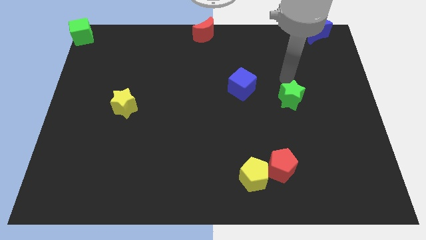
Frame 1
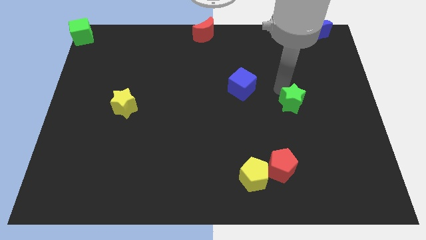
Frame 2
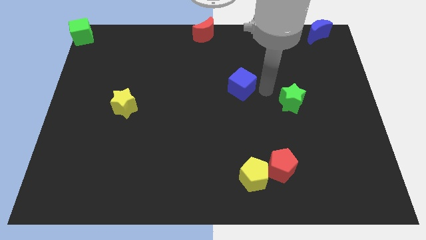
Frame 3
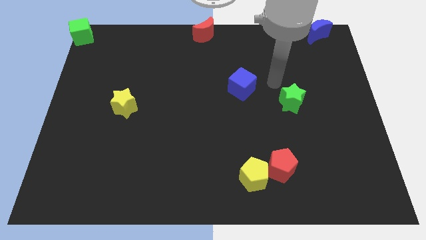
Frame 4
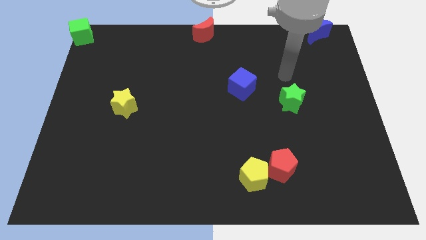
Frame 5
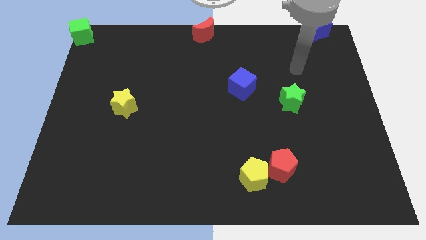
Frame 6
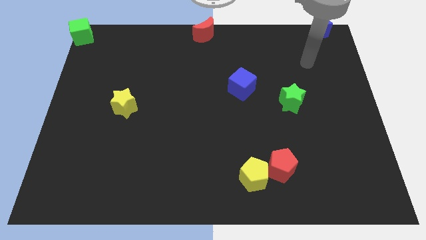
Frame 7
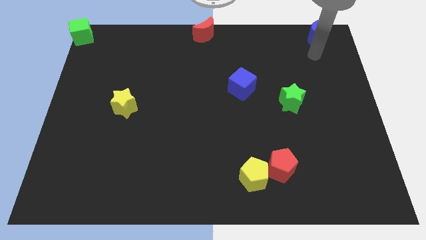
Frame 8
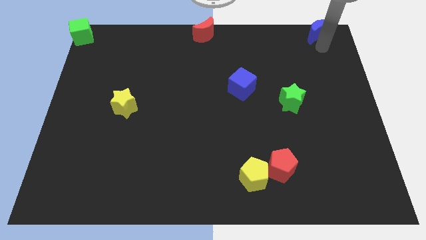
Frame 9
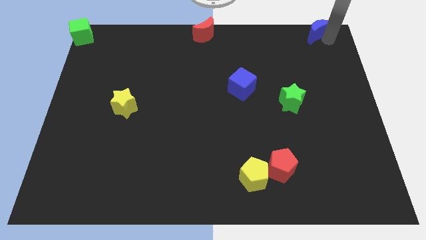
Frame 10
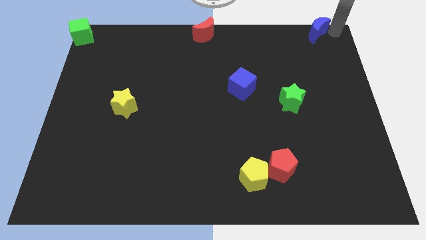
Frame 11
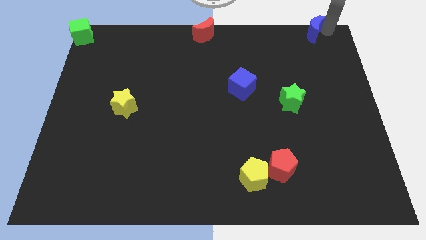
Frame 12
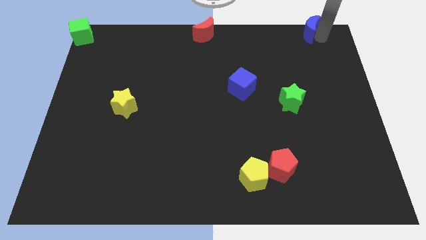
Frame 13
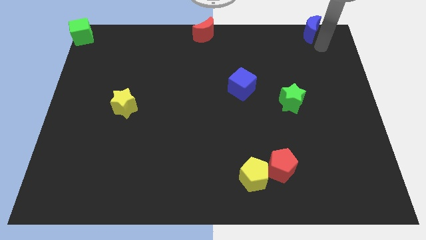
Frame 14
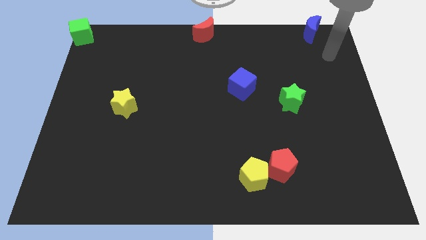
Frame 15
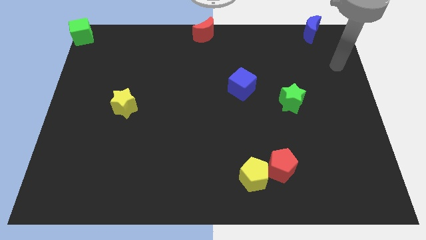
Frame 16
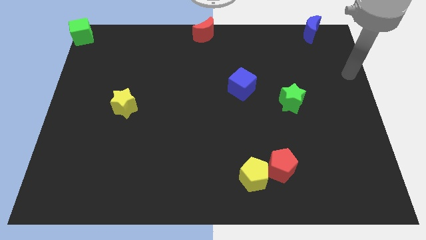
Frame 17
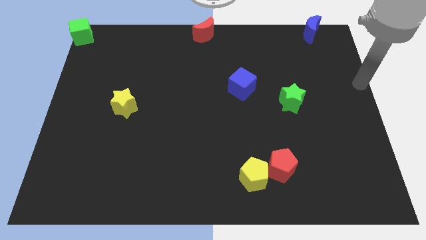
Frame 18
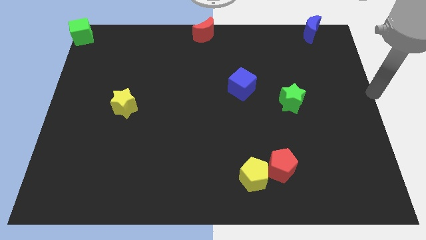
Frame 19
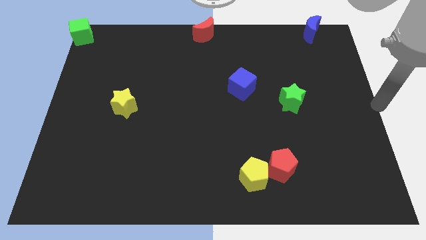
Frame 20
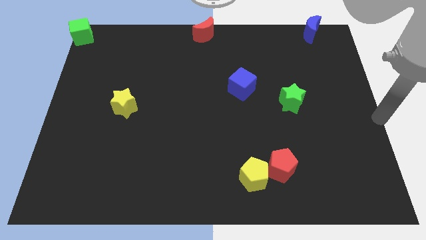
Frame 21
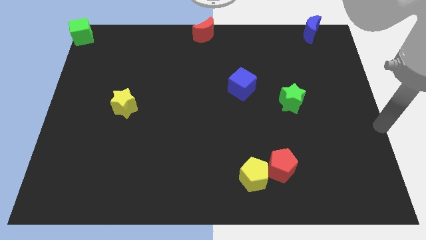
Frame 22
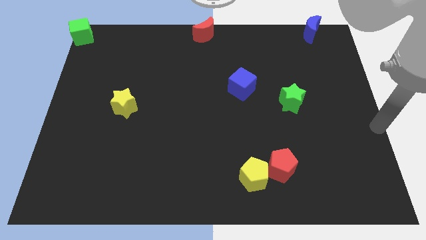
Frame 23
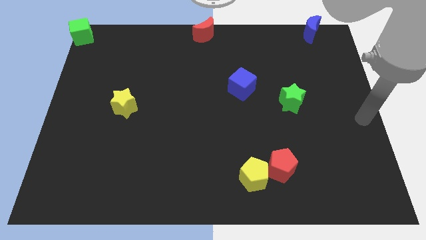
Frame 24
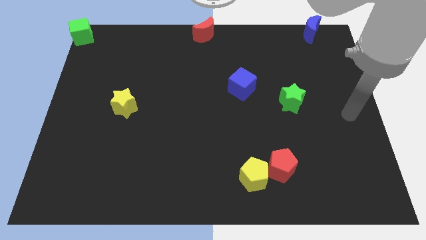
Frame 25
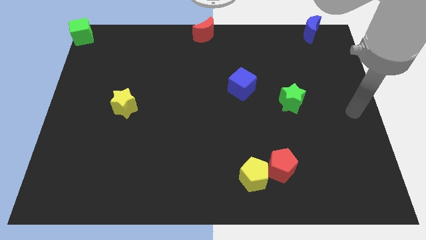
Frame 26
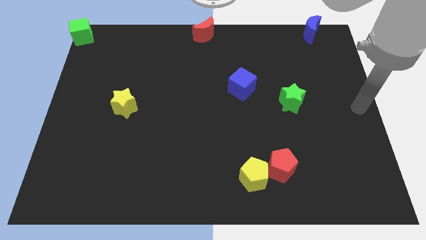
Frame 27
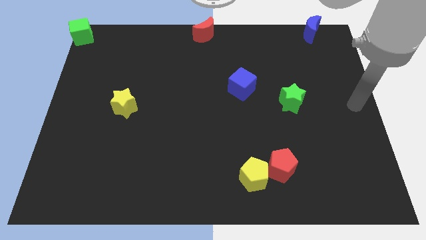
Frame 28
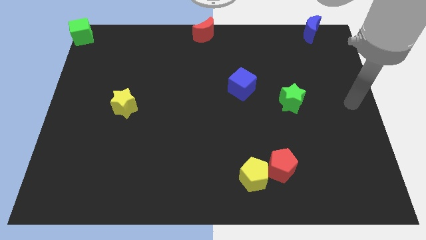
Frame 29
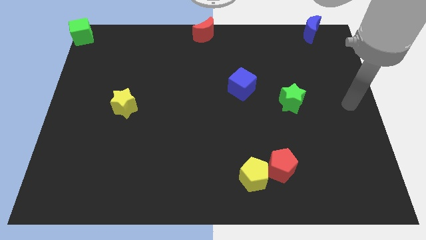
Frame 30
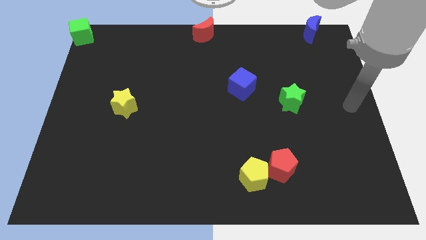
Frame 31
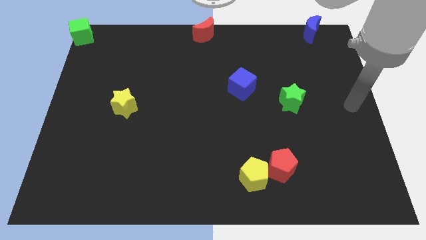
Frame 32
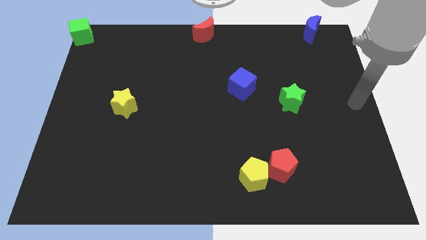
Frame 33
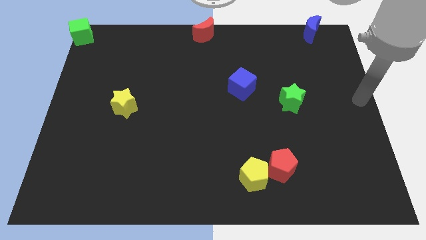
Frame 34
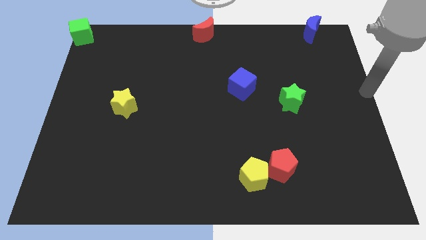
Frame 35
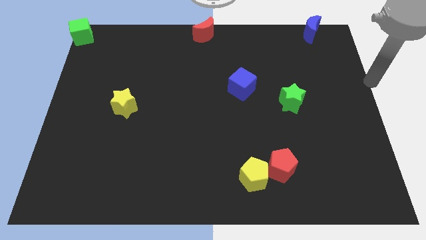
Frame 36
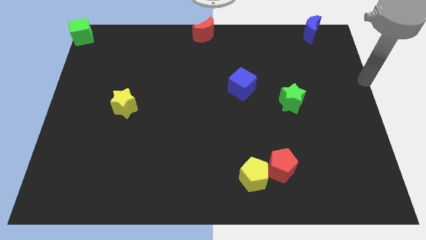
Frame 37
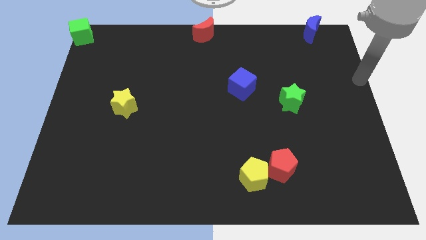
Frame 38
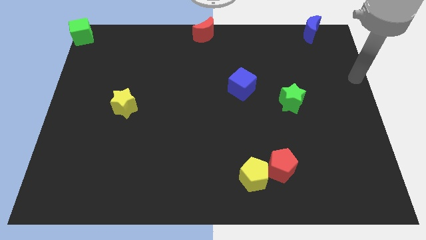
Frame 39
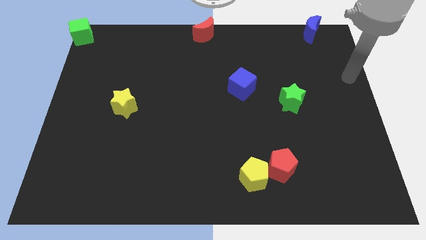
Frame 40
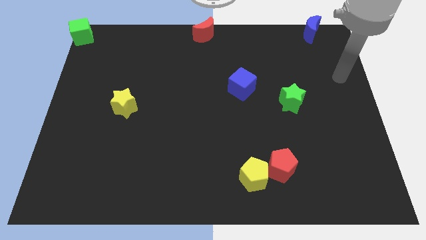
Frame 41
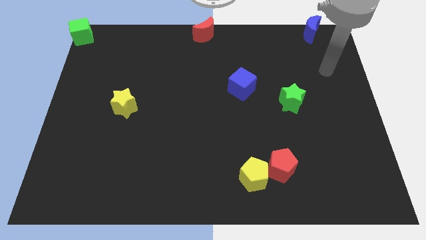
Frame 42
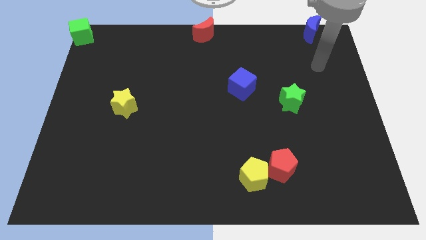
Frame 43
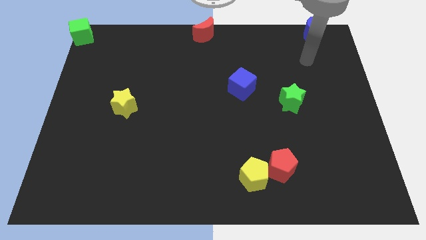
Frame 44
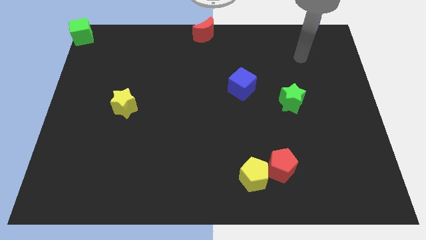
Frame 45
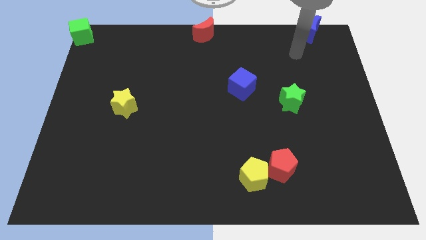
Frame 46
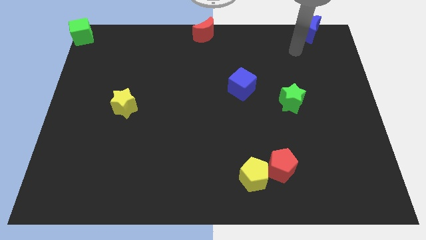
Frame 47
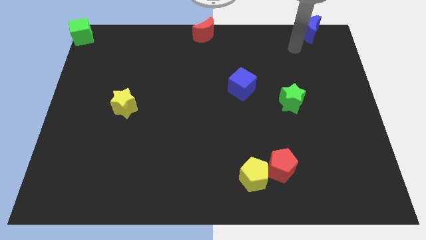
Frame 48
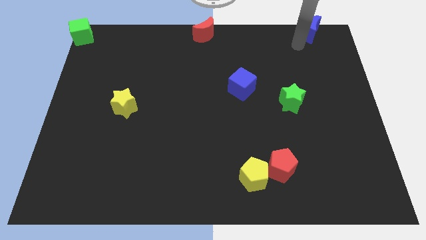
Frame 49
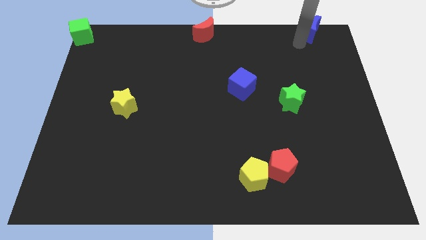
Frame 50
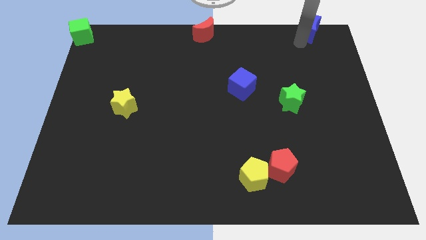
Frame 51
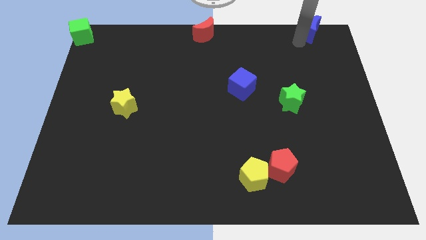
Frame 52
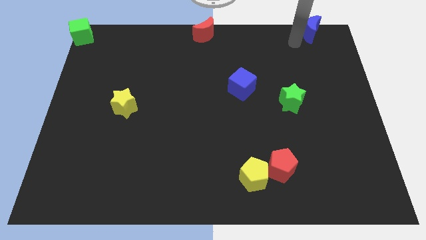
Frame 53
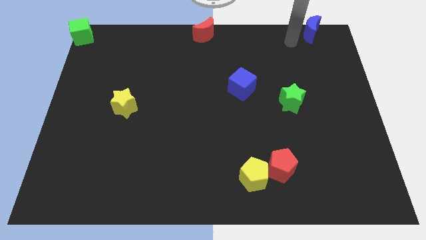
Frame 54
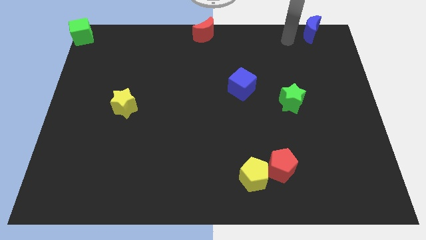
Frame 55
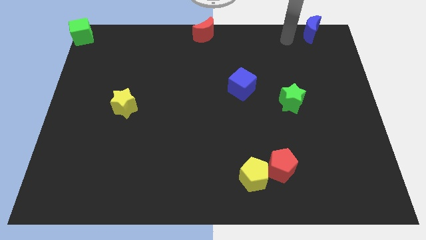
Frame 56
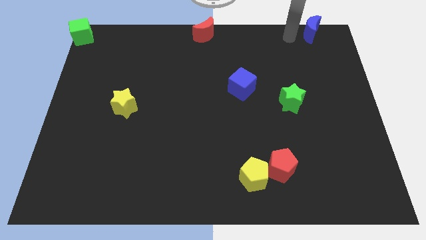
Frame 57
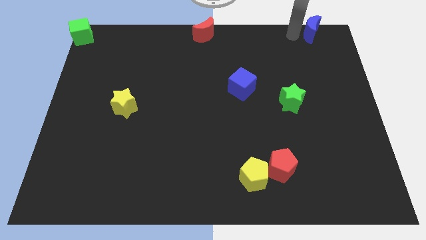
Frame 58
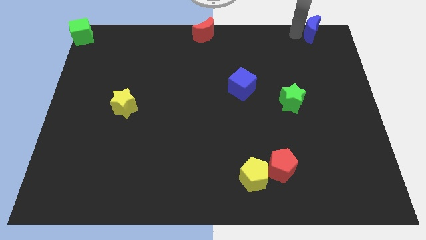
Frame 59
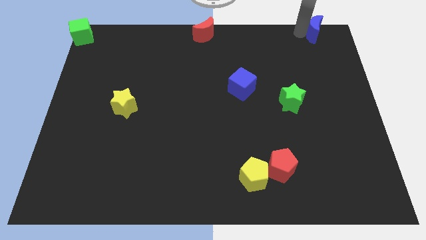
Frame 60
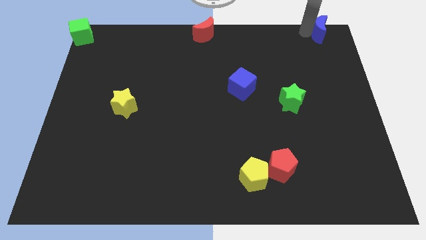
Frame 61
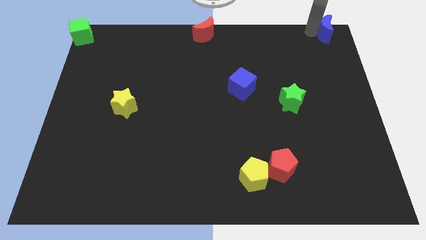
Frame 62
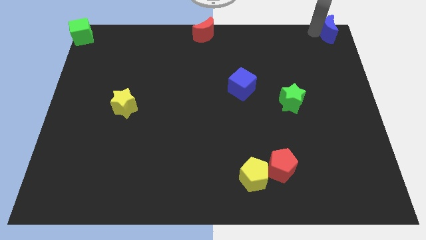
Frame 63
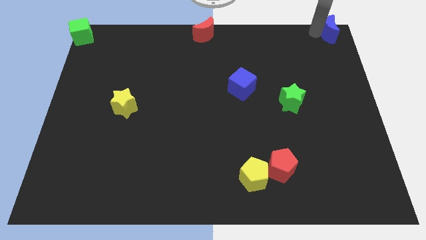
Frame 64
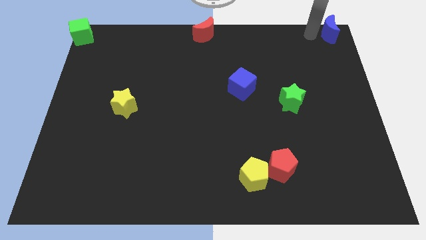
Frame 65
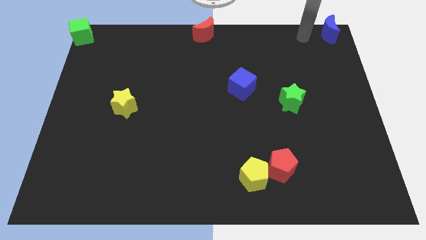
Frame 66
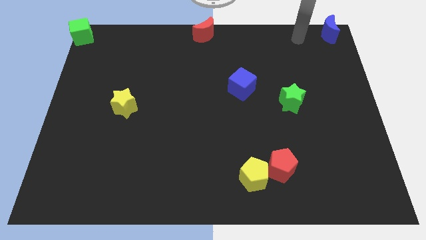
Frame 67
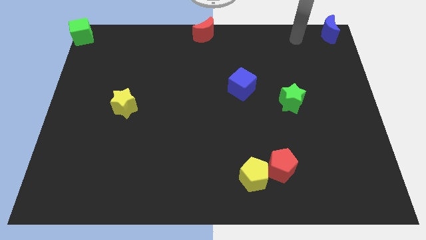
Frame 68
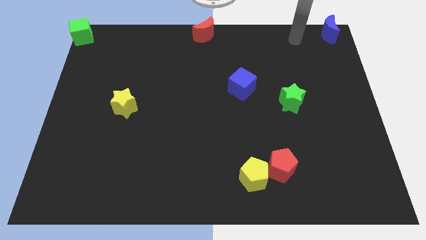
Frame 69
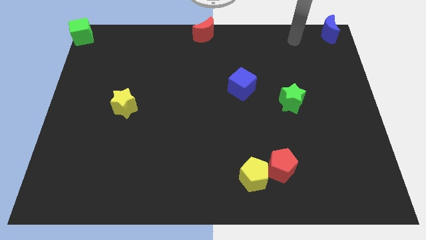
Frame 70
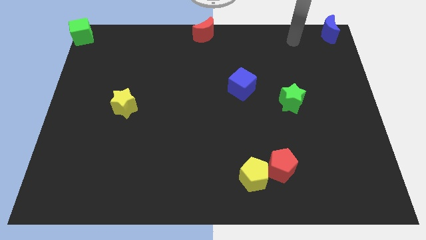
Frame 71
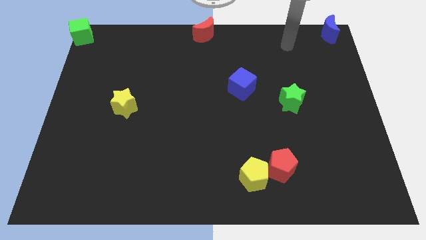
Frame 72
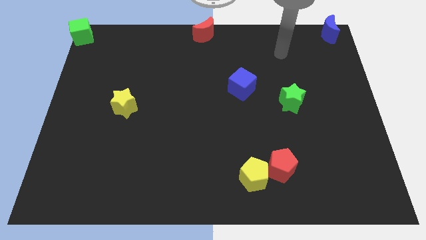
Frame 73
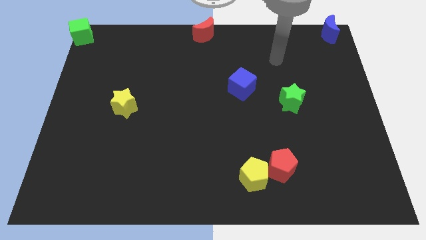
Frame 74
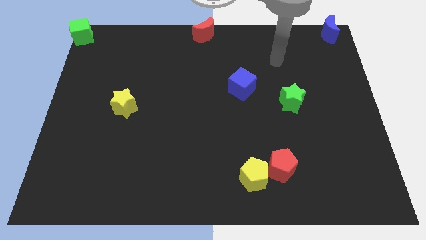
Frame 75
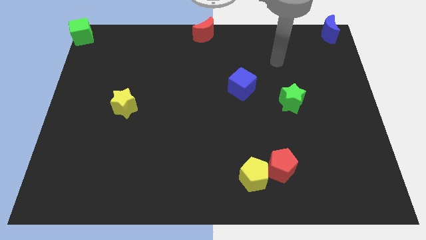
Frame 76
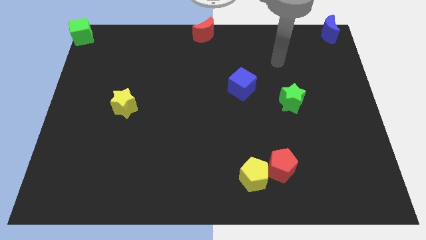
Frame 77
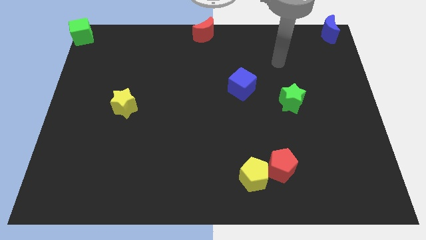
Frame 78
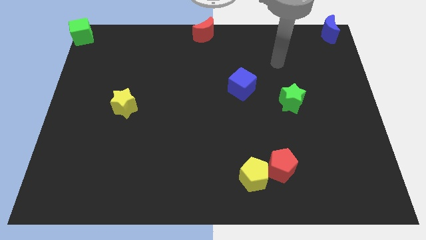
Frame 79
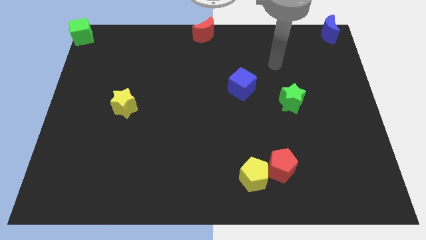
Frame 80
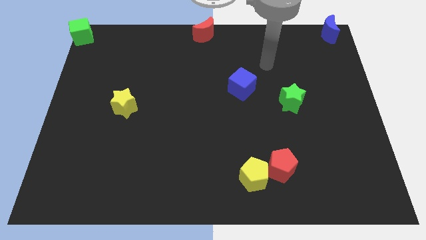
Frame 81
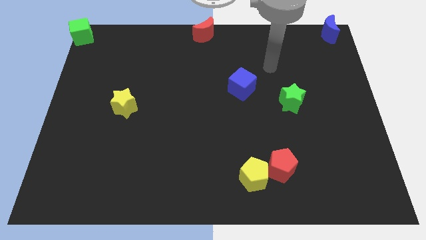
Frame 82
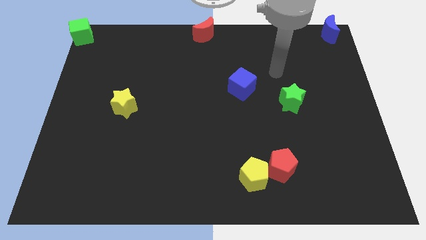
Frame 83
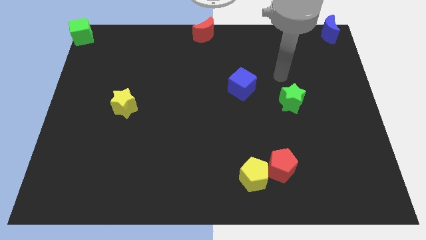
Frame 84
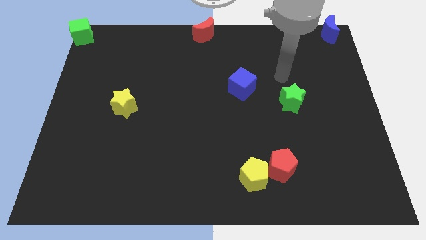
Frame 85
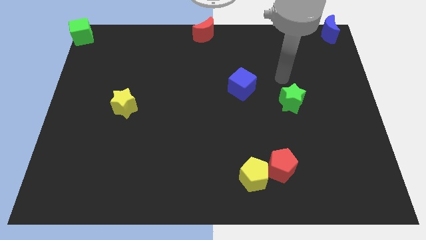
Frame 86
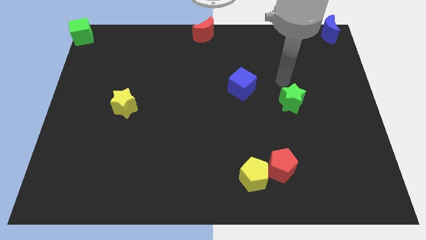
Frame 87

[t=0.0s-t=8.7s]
move arm to the green star

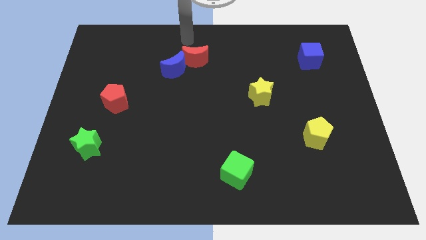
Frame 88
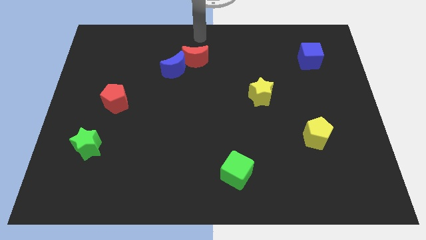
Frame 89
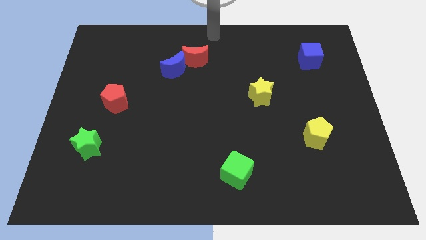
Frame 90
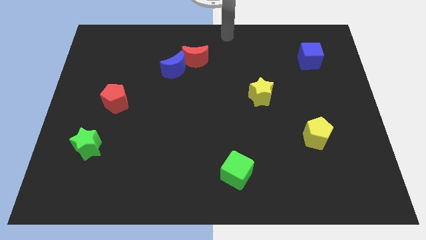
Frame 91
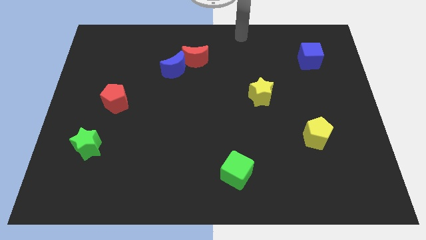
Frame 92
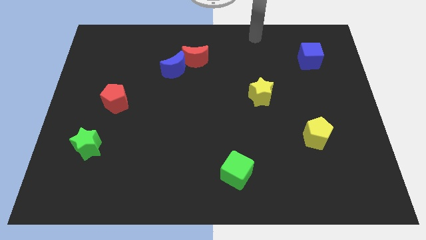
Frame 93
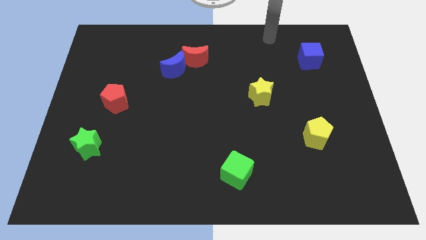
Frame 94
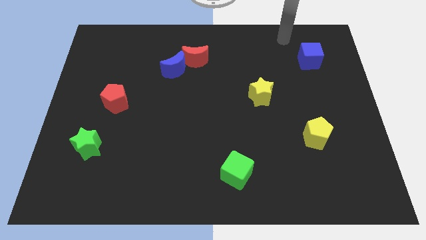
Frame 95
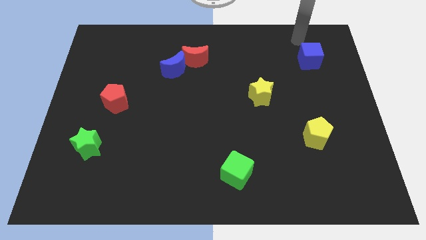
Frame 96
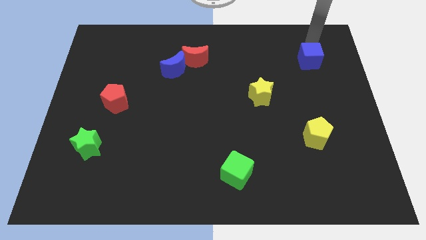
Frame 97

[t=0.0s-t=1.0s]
point your arm at the top of the blue cube
